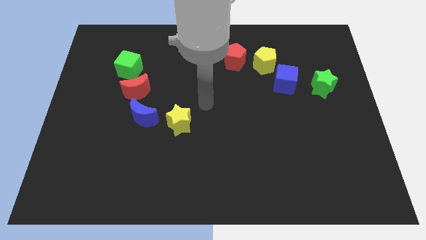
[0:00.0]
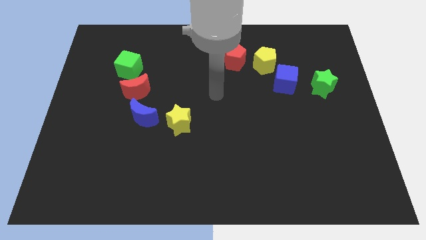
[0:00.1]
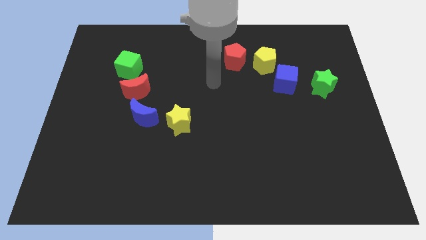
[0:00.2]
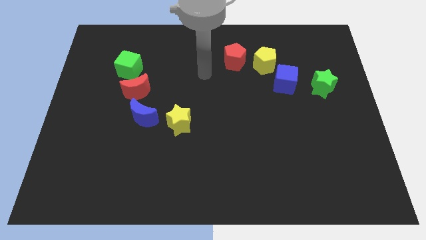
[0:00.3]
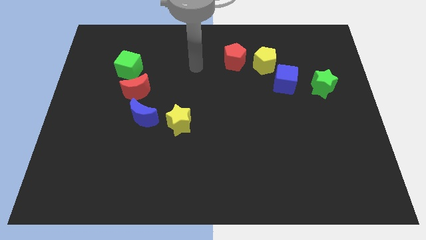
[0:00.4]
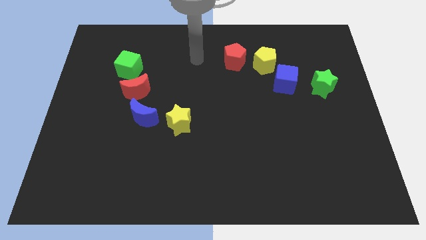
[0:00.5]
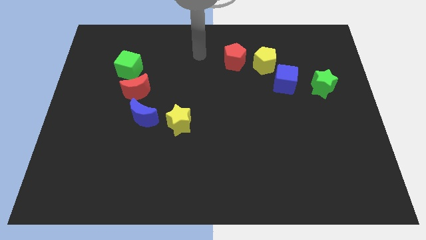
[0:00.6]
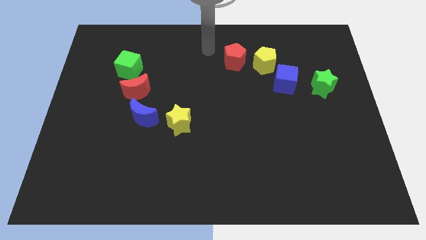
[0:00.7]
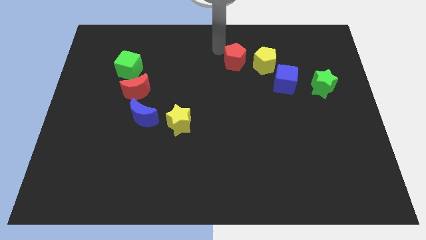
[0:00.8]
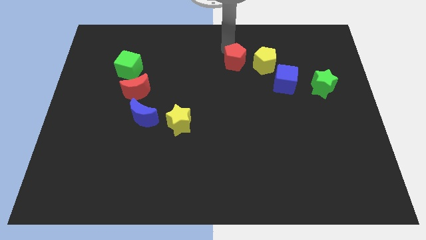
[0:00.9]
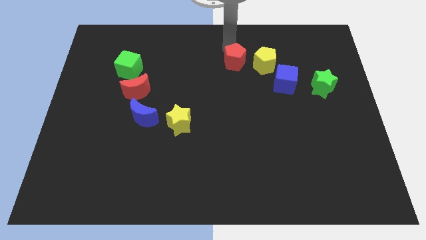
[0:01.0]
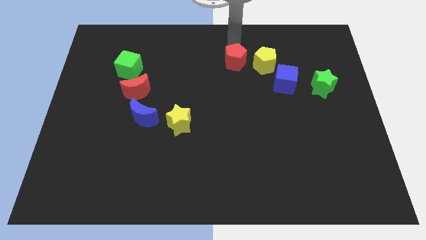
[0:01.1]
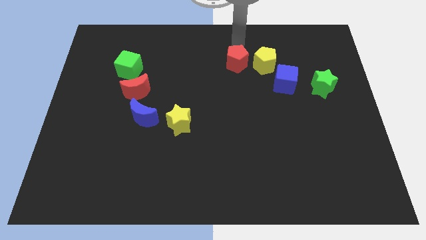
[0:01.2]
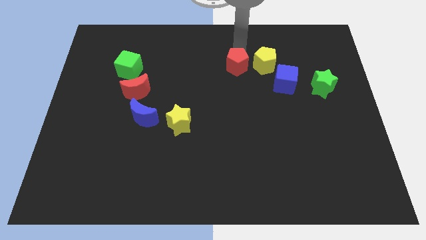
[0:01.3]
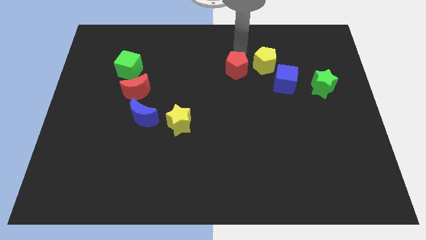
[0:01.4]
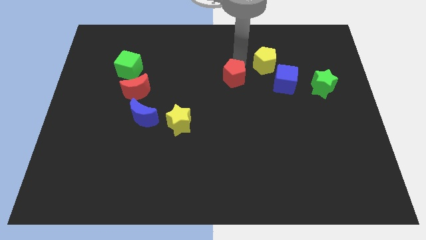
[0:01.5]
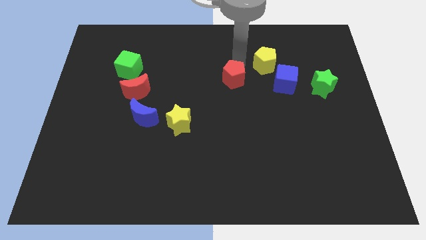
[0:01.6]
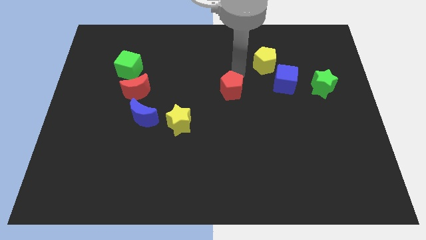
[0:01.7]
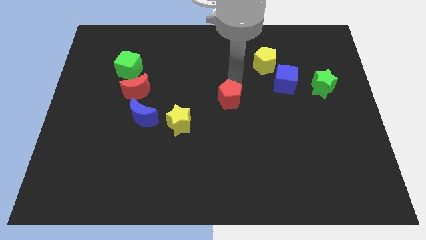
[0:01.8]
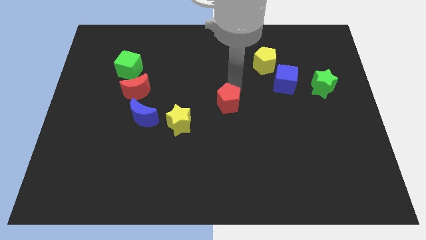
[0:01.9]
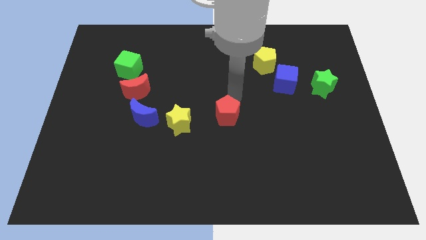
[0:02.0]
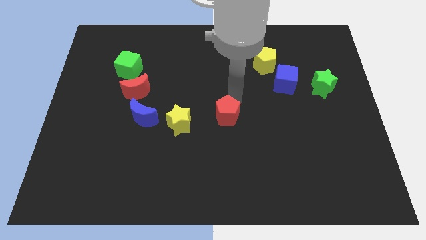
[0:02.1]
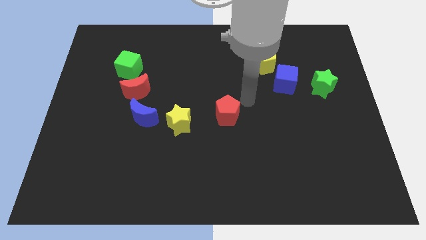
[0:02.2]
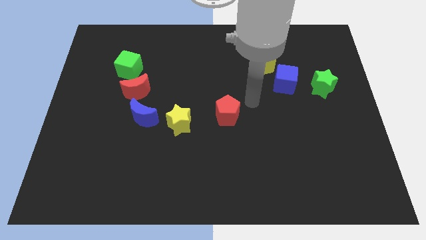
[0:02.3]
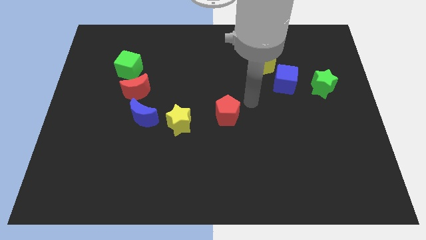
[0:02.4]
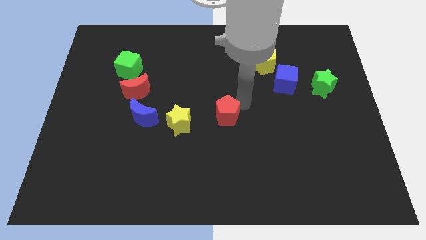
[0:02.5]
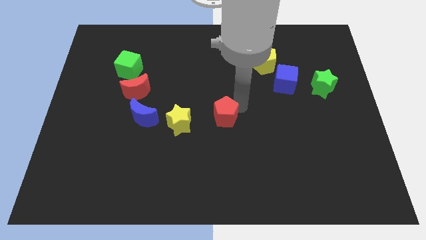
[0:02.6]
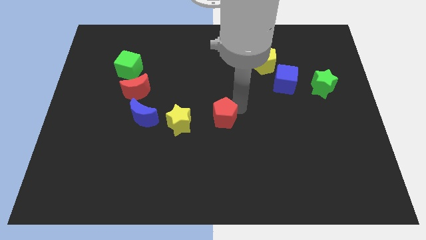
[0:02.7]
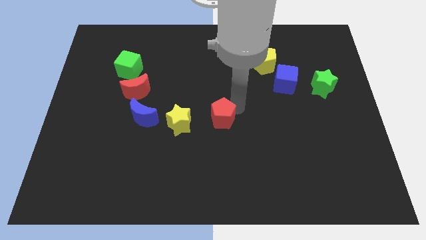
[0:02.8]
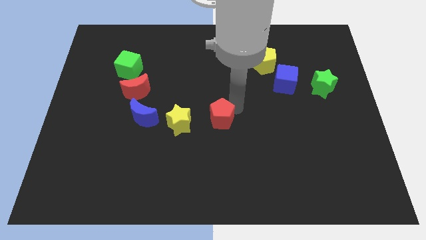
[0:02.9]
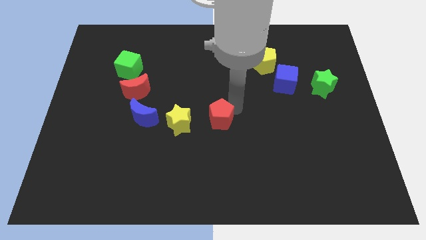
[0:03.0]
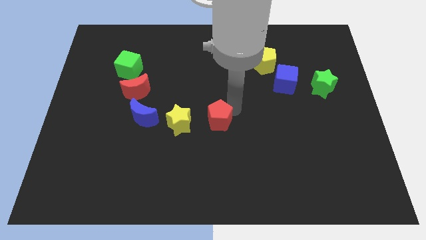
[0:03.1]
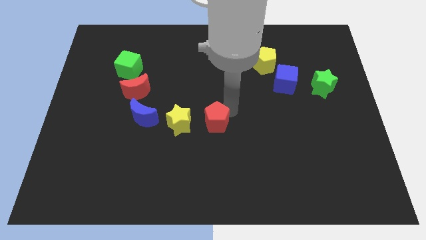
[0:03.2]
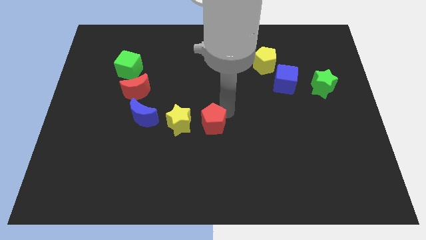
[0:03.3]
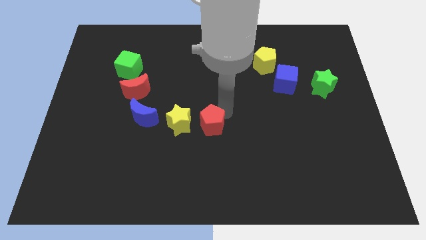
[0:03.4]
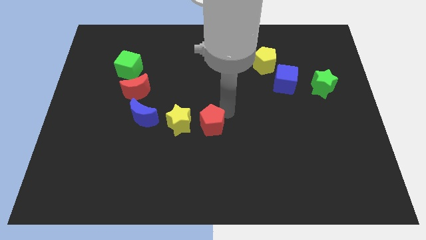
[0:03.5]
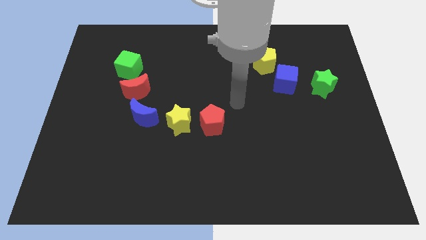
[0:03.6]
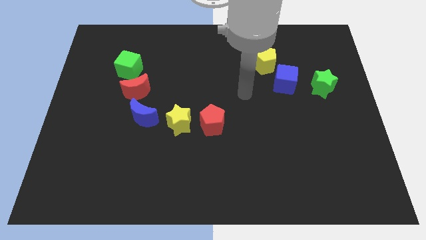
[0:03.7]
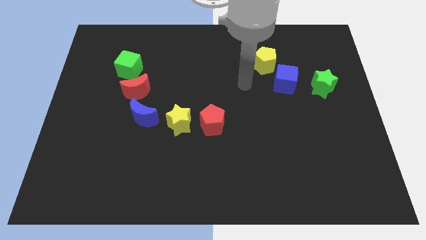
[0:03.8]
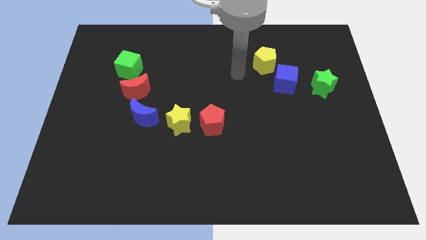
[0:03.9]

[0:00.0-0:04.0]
move the red pentagon close to the yellow star

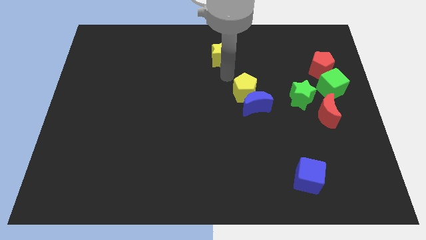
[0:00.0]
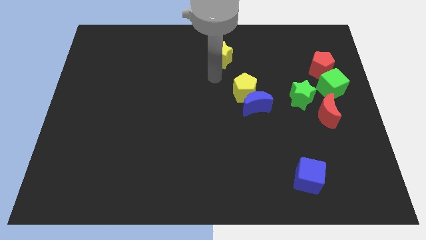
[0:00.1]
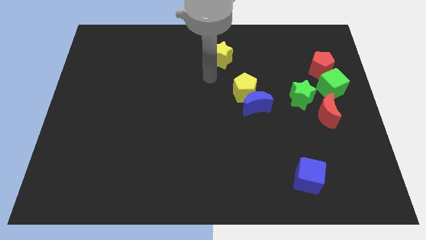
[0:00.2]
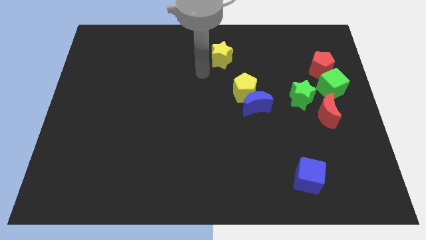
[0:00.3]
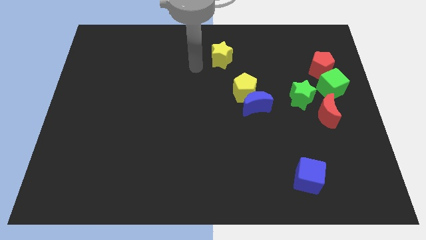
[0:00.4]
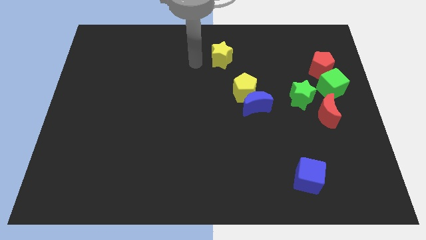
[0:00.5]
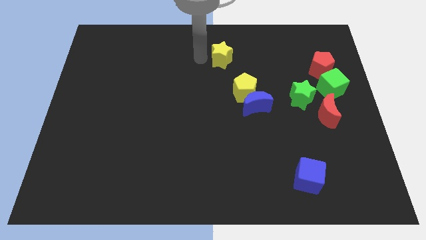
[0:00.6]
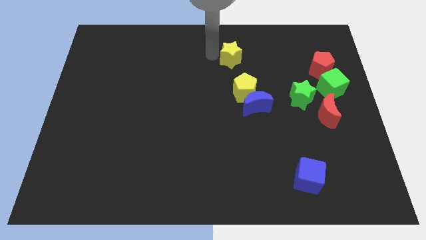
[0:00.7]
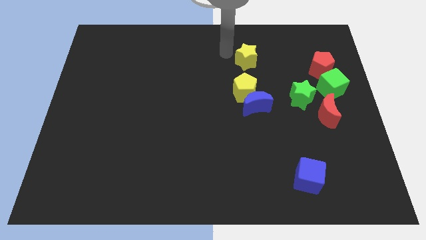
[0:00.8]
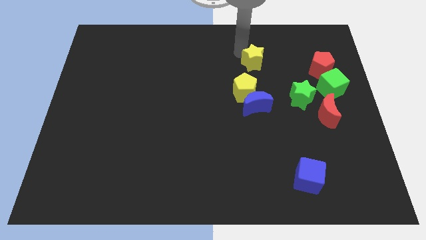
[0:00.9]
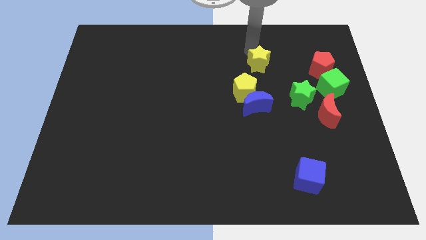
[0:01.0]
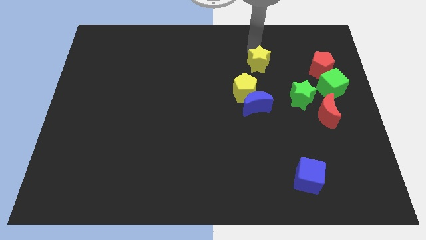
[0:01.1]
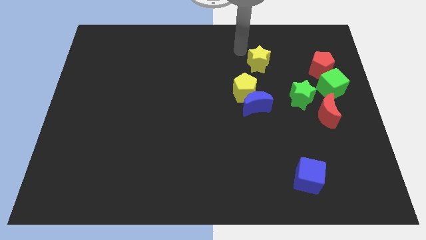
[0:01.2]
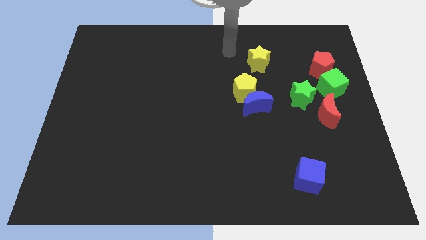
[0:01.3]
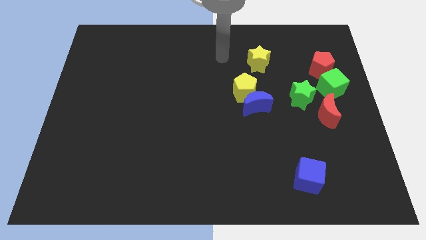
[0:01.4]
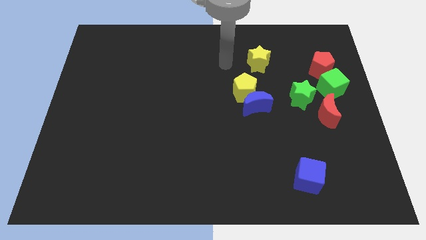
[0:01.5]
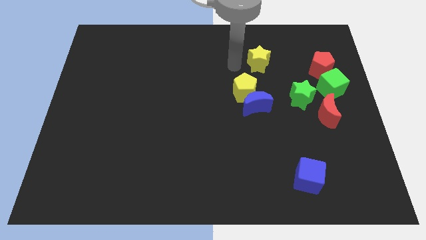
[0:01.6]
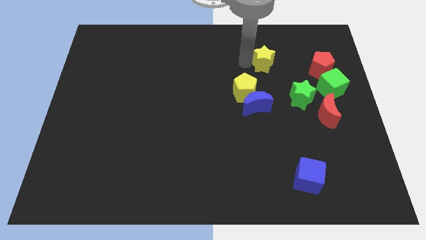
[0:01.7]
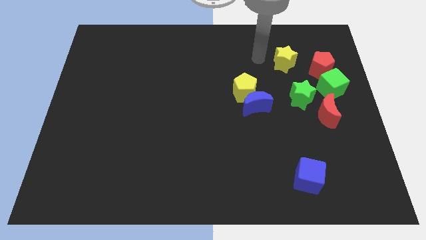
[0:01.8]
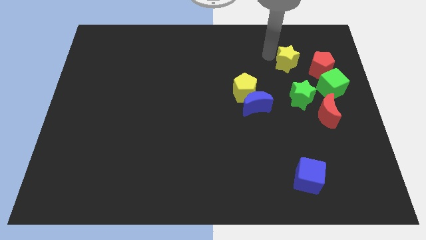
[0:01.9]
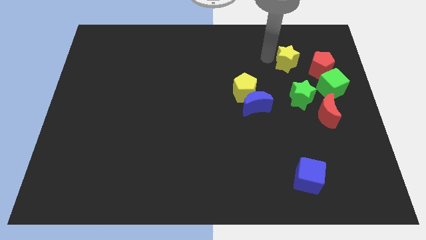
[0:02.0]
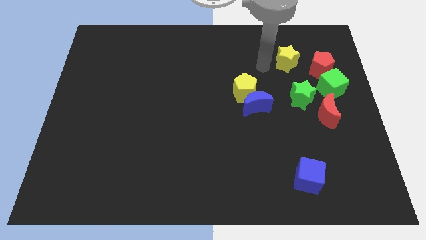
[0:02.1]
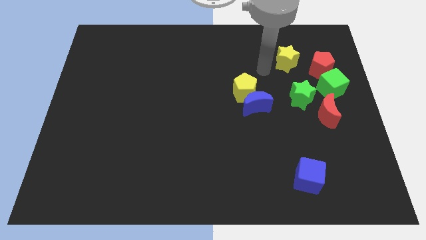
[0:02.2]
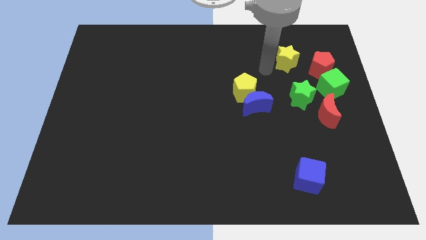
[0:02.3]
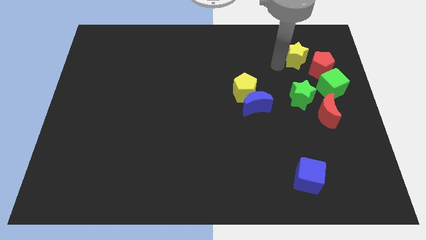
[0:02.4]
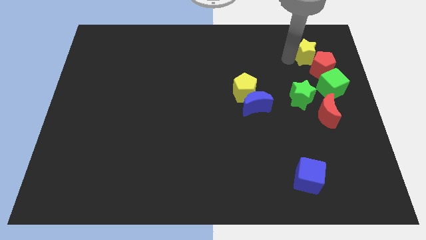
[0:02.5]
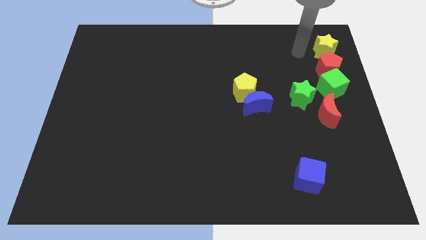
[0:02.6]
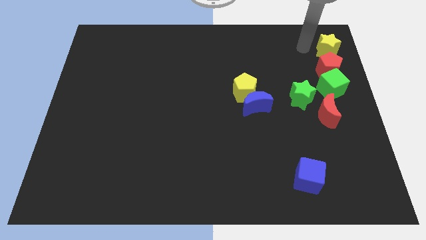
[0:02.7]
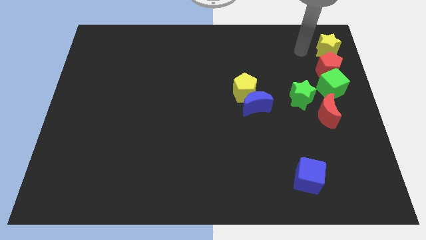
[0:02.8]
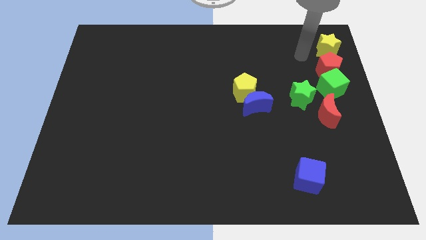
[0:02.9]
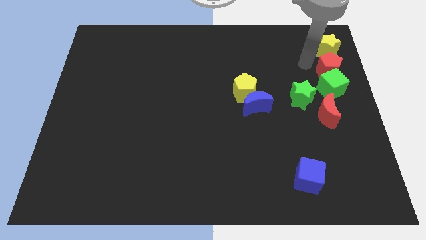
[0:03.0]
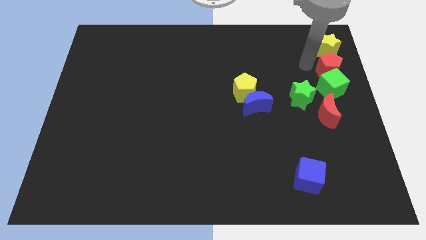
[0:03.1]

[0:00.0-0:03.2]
push yellow star above red pentagon

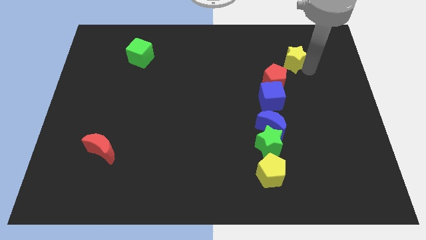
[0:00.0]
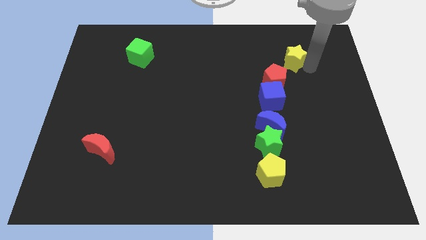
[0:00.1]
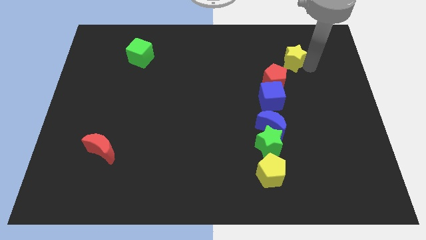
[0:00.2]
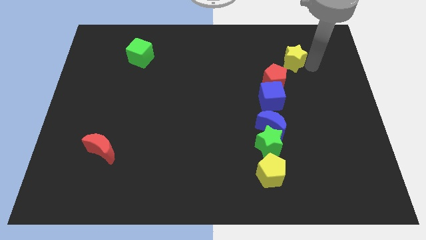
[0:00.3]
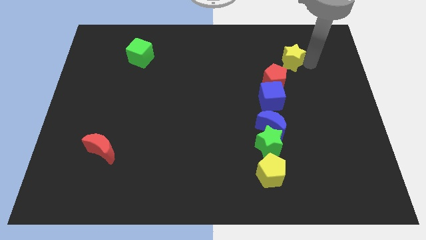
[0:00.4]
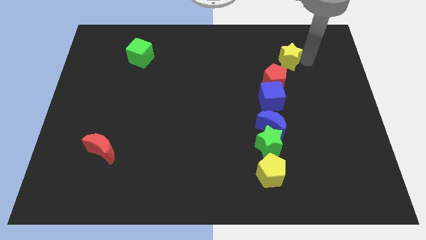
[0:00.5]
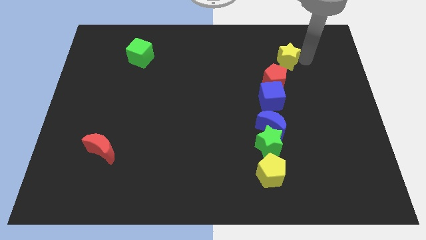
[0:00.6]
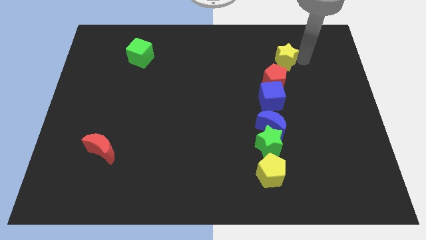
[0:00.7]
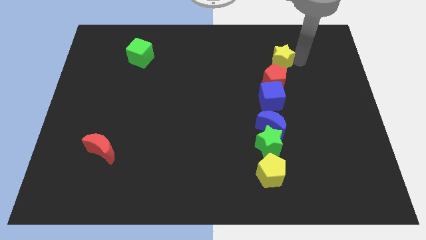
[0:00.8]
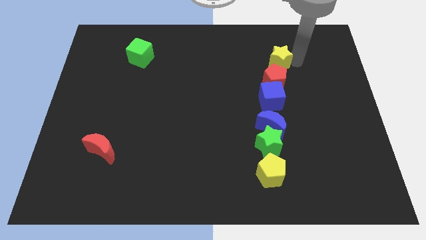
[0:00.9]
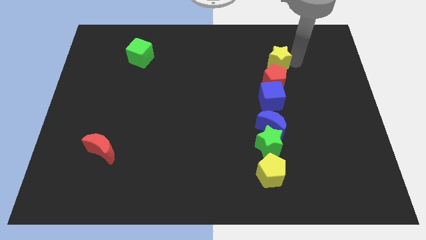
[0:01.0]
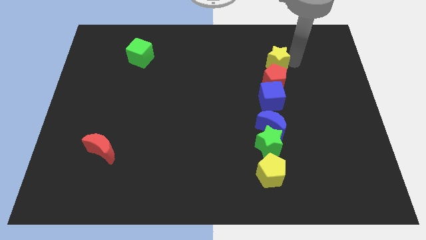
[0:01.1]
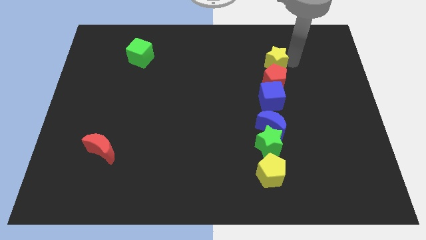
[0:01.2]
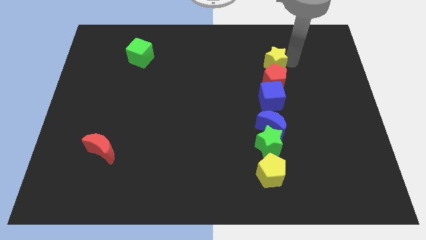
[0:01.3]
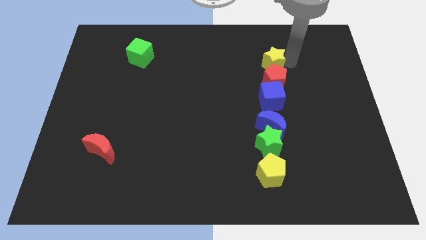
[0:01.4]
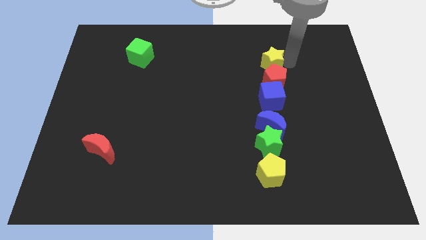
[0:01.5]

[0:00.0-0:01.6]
place yellow star to the top of red pentagon
